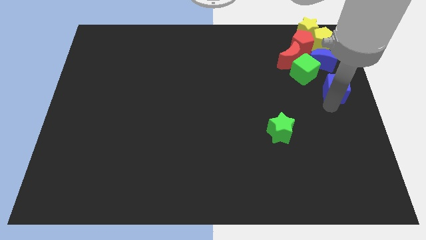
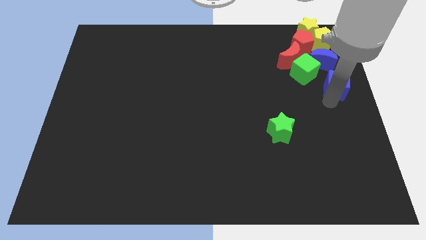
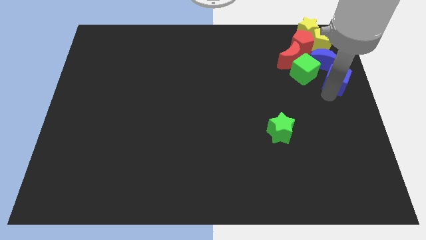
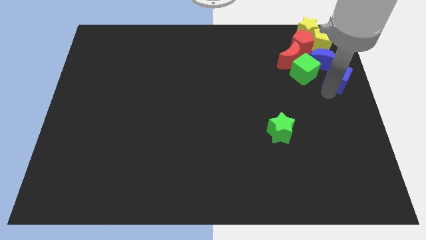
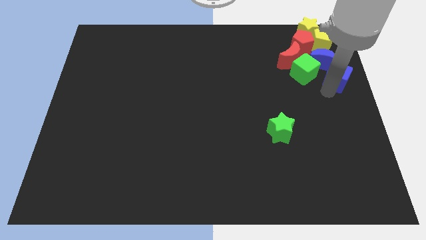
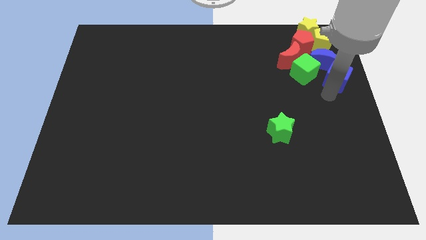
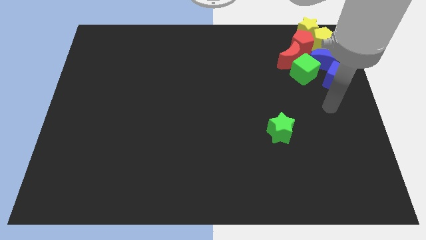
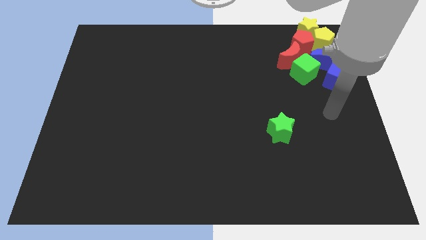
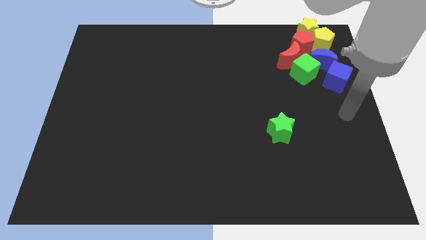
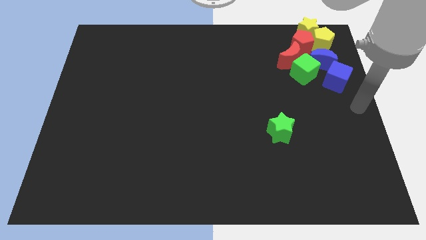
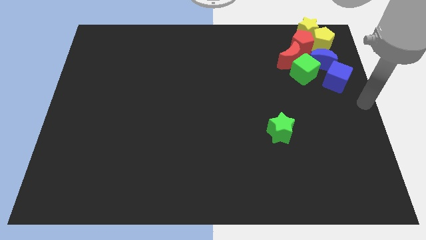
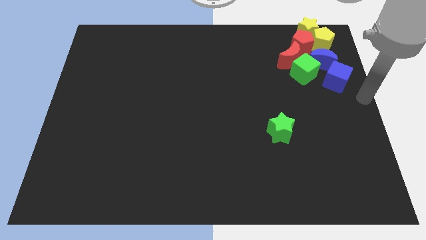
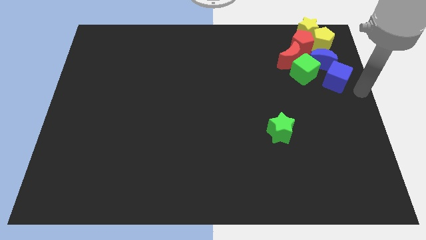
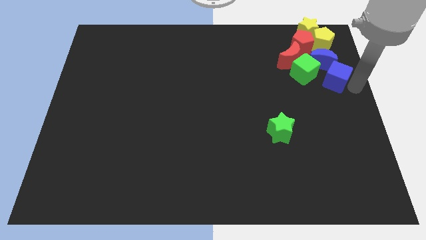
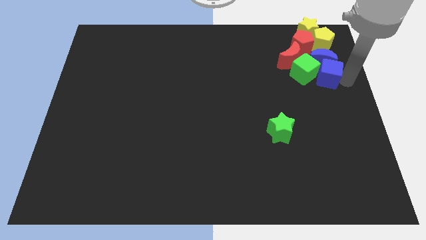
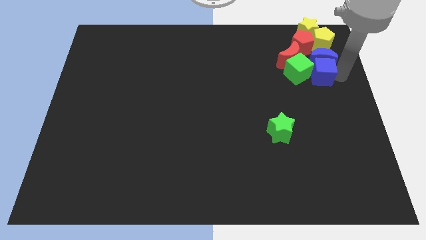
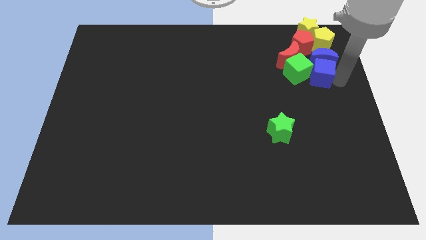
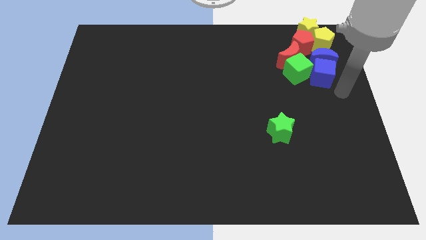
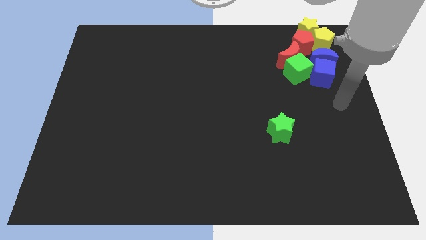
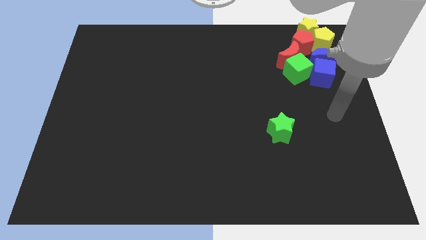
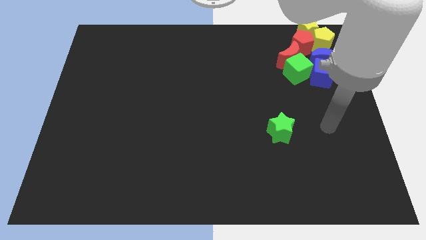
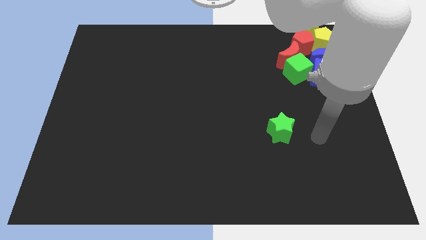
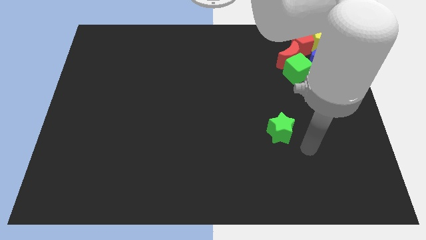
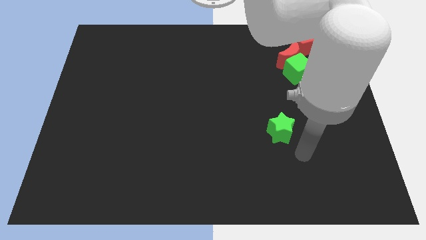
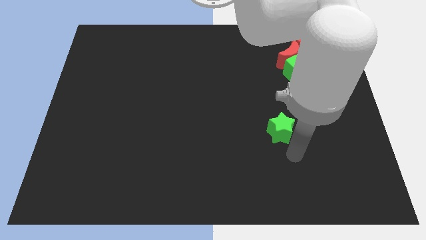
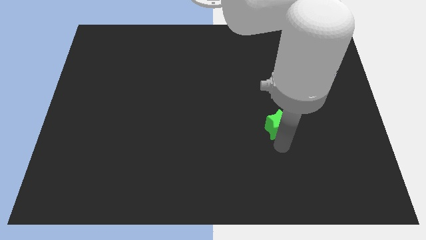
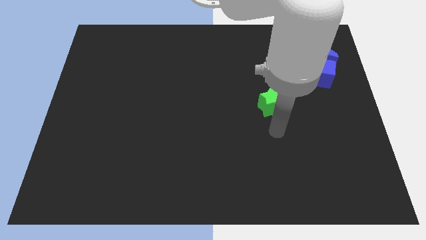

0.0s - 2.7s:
move the blue cube into the group of blocks

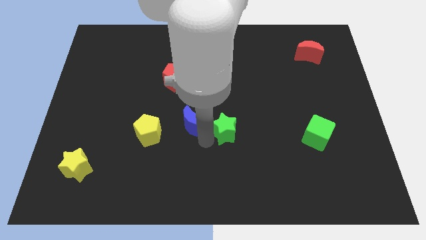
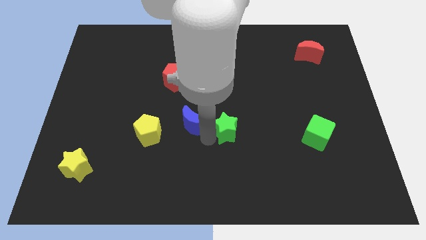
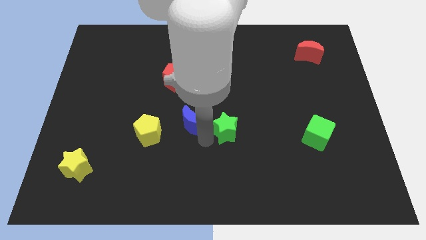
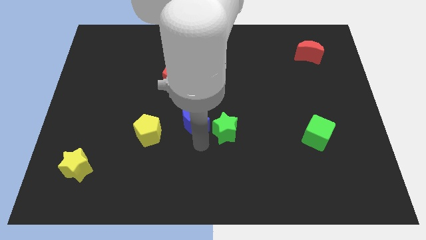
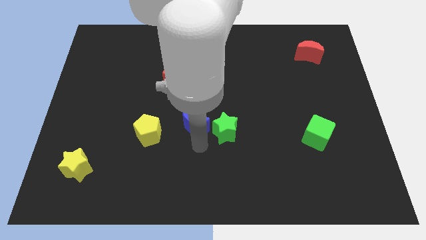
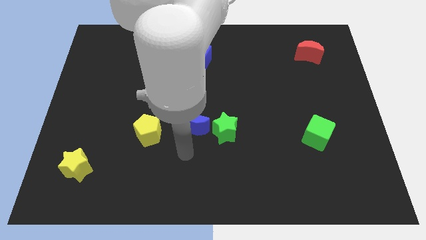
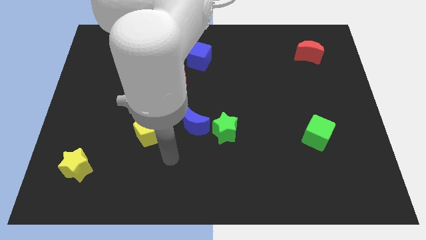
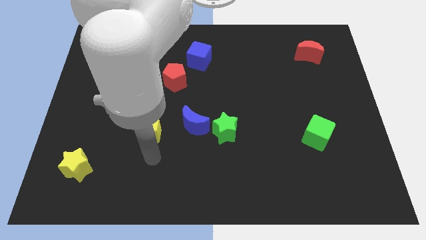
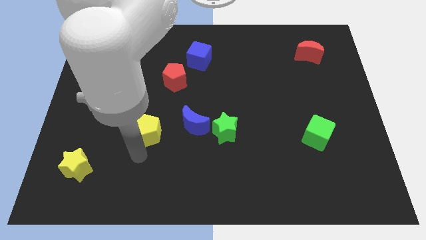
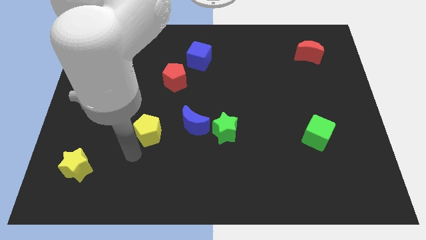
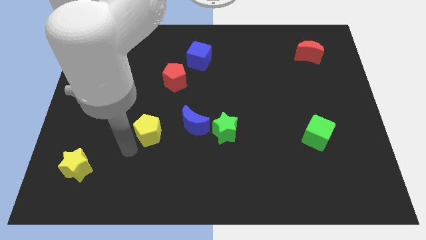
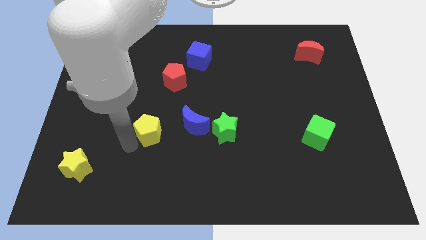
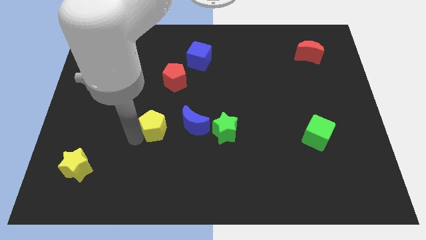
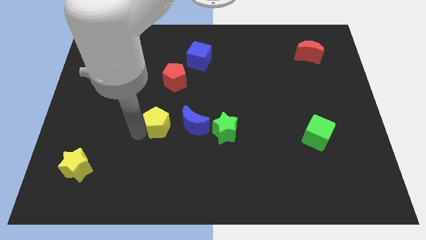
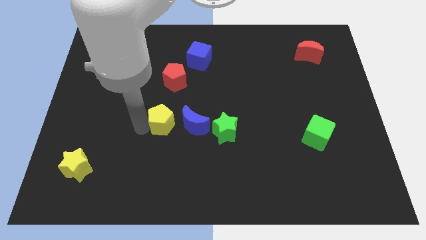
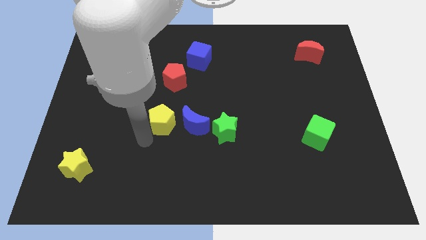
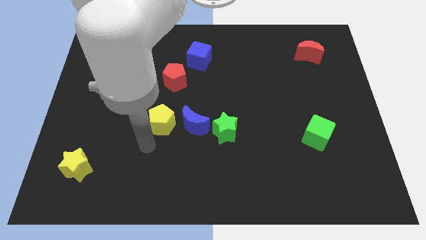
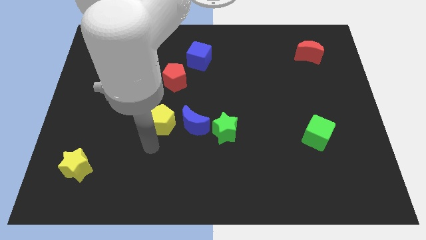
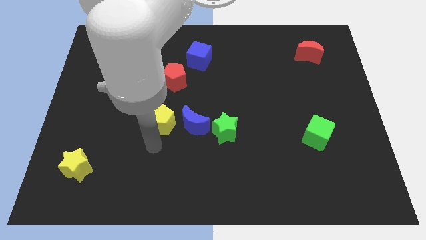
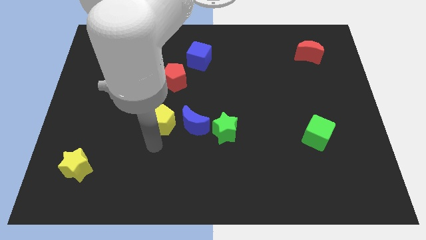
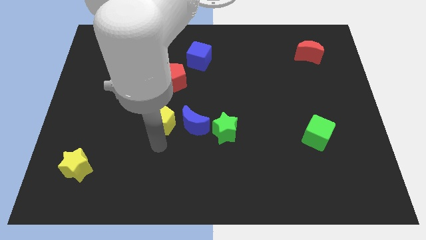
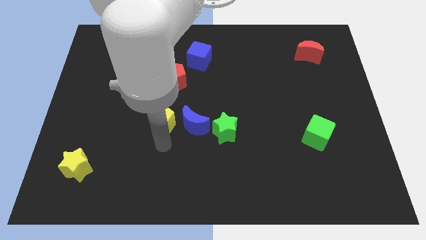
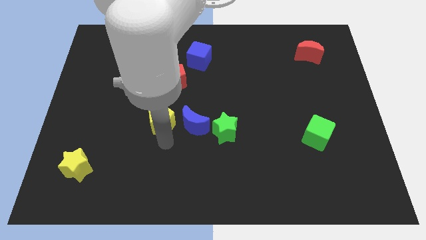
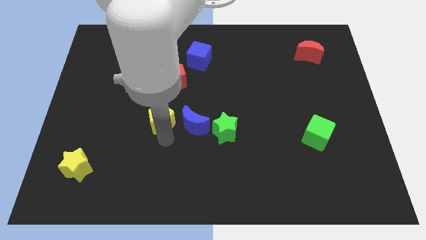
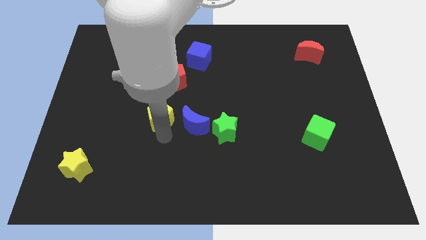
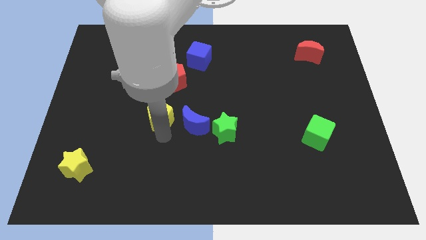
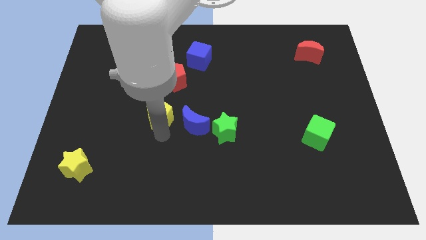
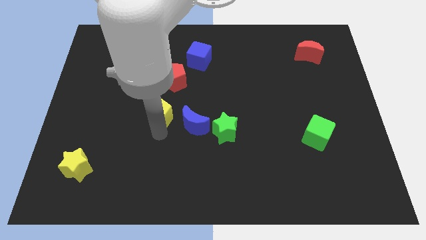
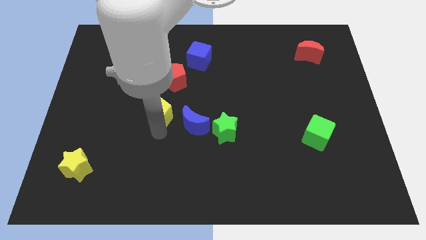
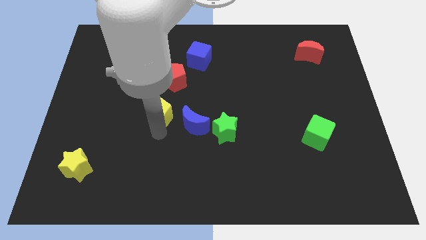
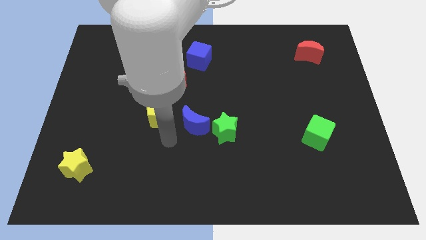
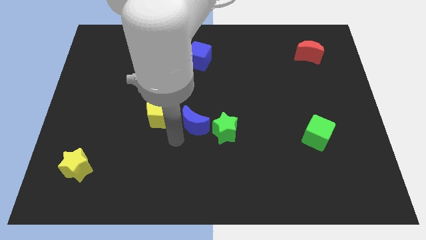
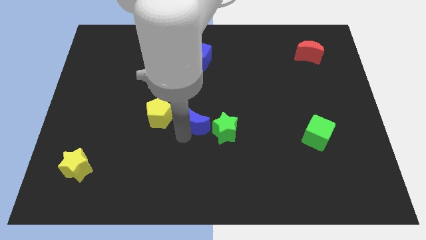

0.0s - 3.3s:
slide the yellow pentagon to the top left side of the blue moon

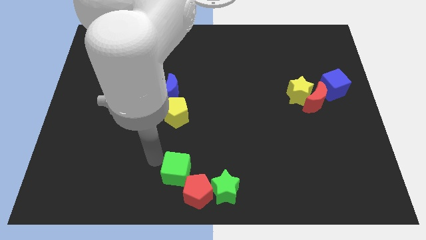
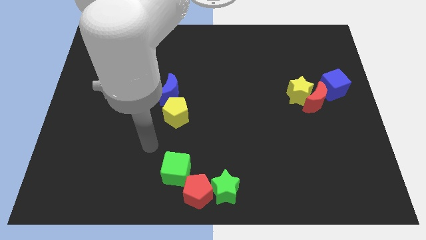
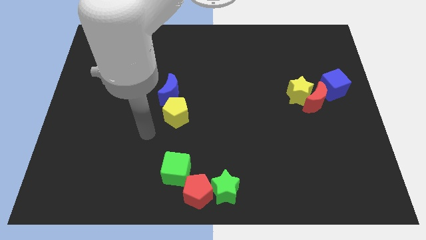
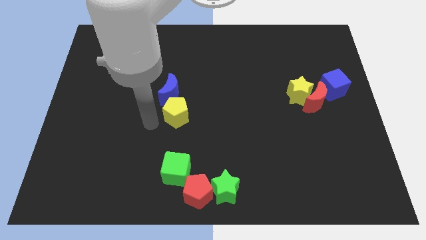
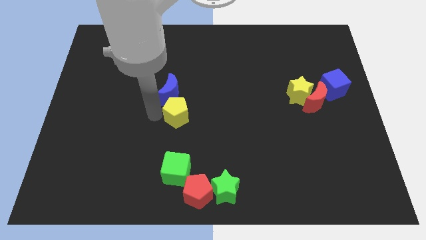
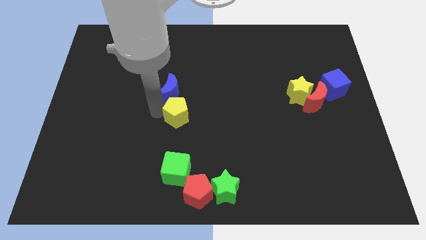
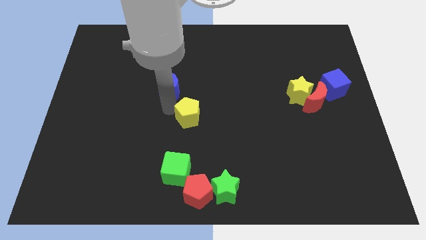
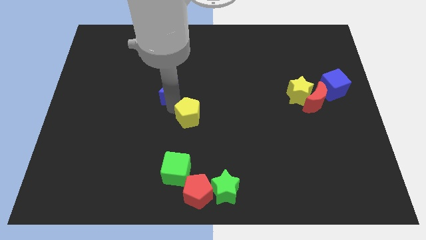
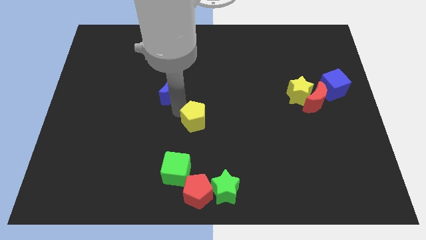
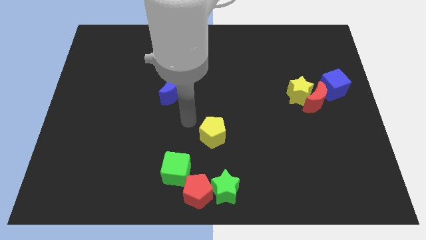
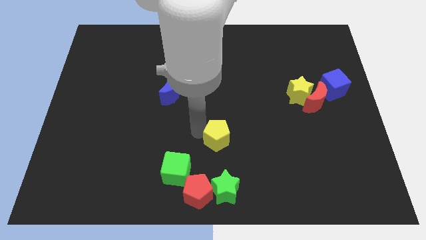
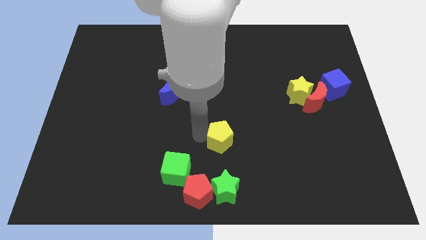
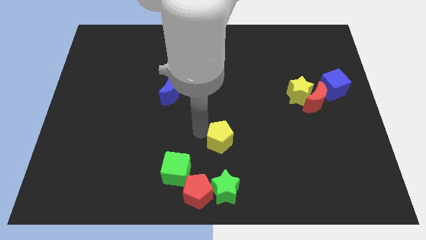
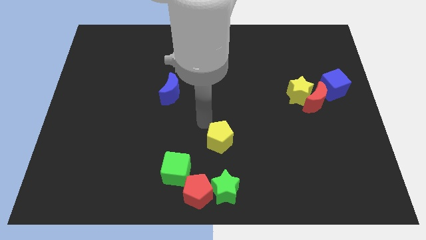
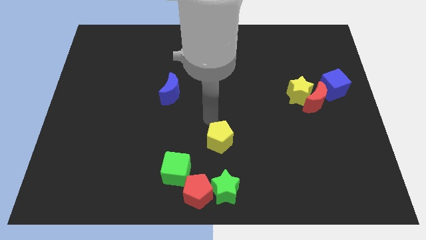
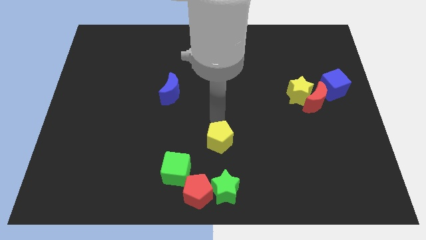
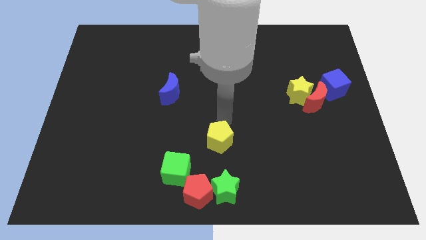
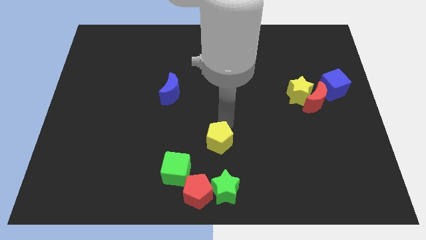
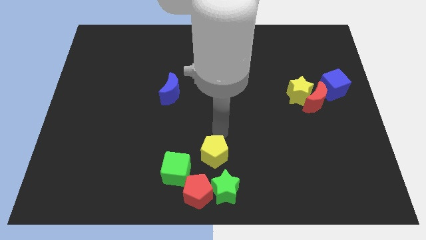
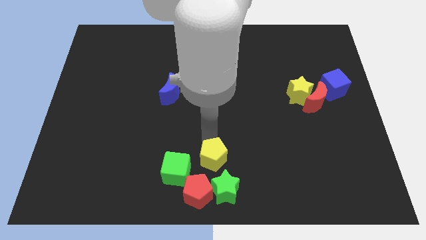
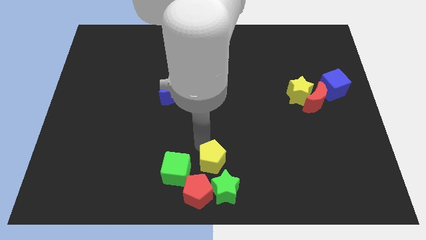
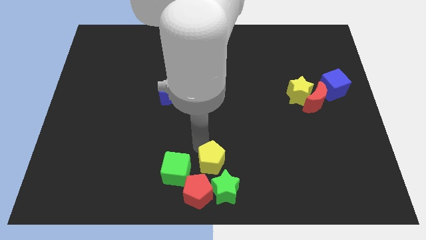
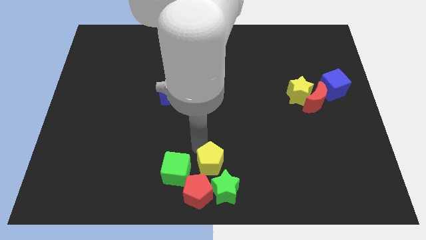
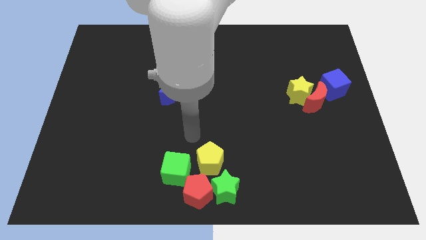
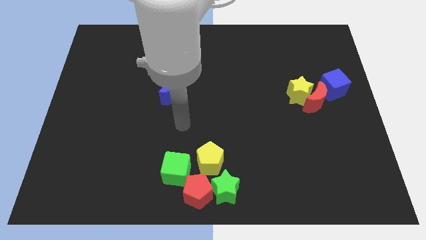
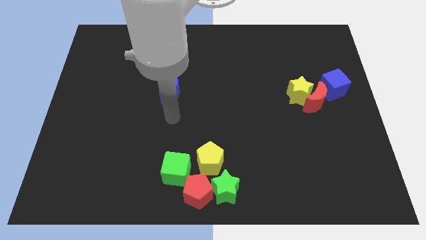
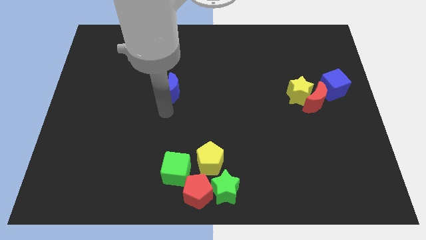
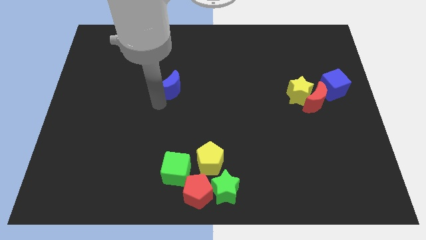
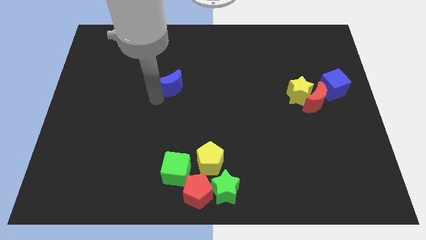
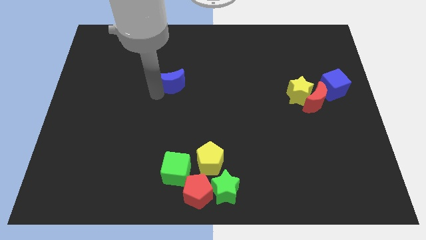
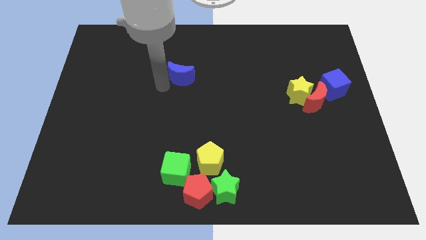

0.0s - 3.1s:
place the yellow pentagon near to the group of objects

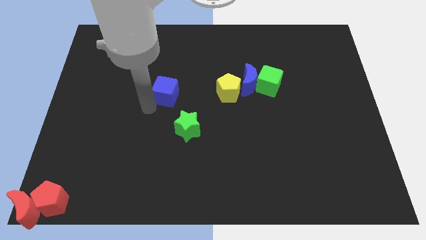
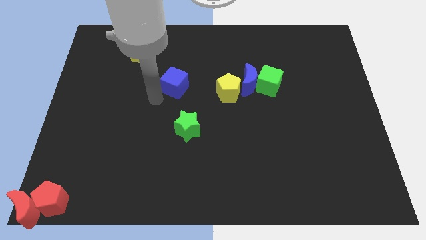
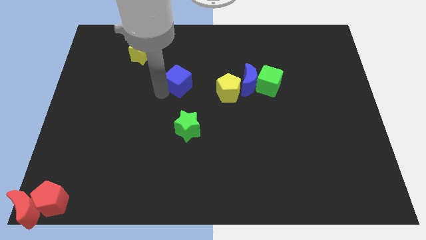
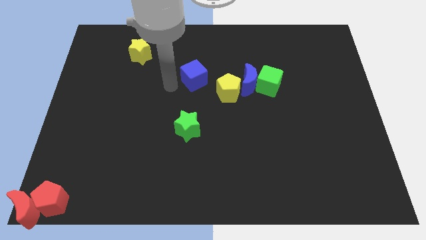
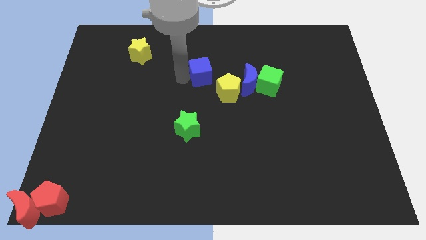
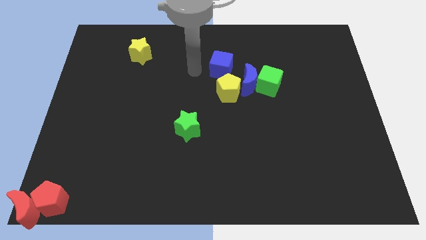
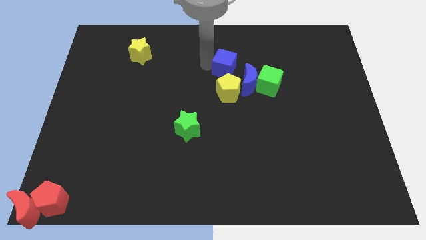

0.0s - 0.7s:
move the blue cube above the yellow pentagon
